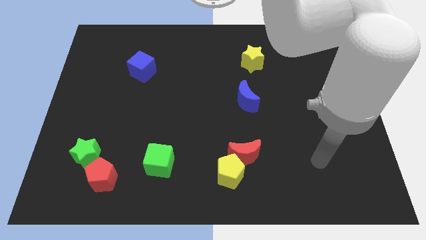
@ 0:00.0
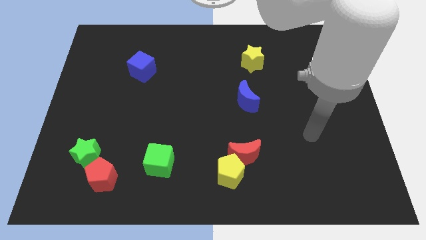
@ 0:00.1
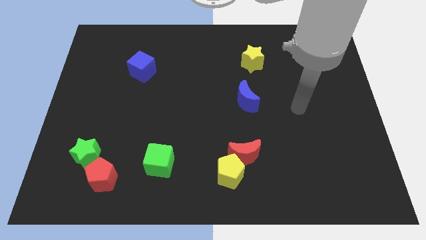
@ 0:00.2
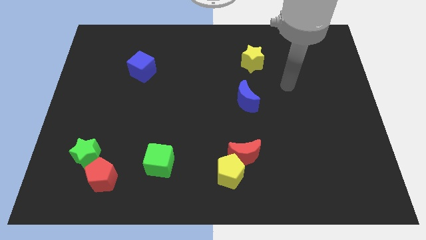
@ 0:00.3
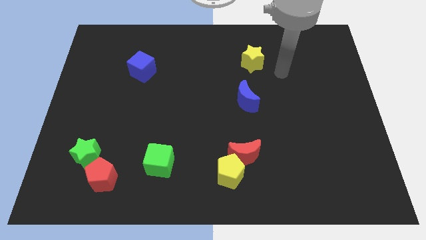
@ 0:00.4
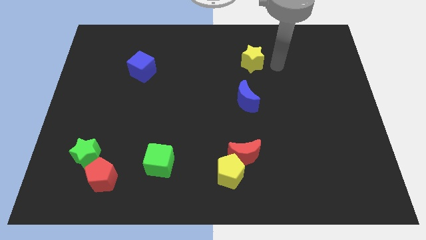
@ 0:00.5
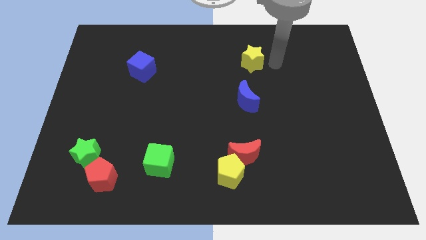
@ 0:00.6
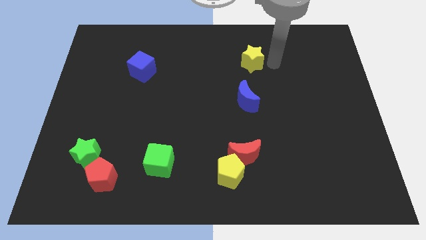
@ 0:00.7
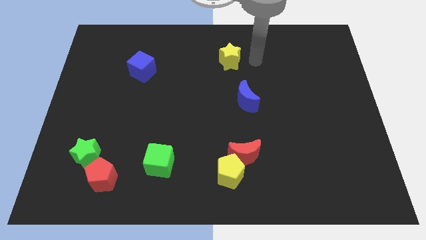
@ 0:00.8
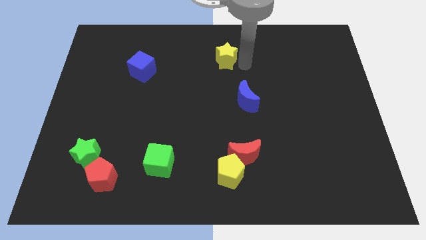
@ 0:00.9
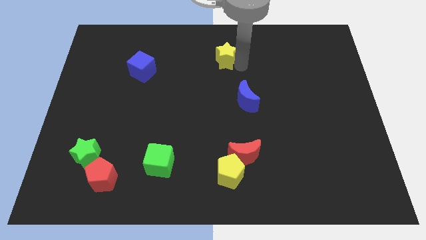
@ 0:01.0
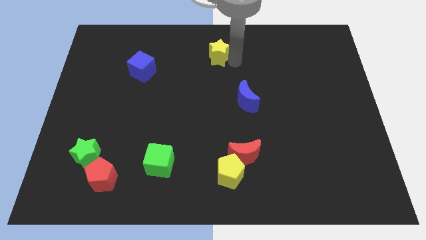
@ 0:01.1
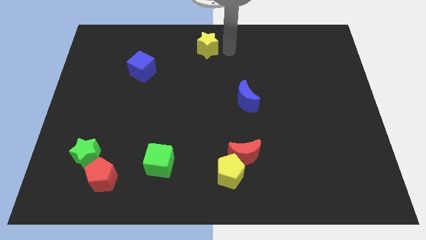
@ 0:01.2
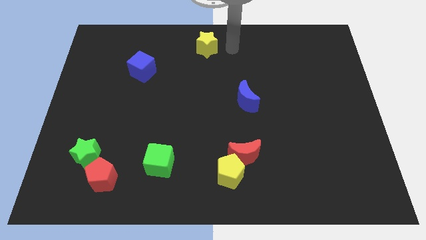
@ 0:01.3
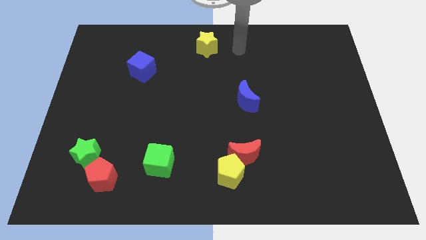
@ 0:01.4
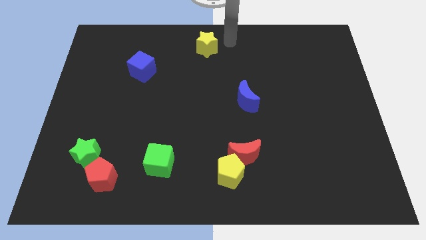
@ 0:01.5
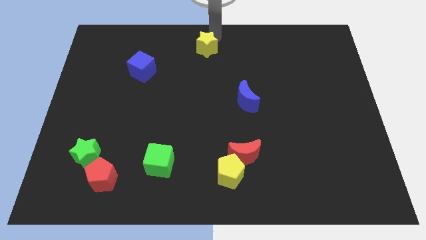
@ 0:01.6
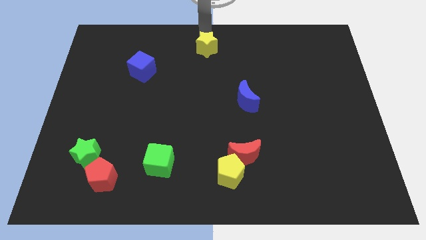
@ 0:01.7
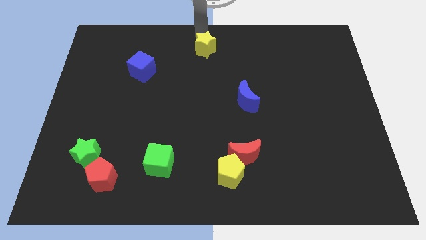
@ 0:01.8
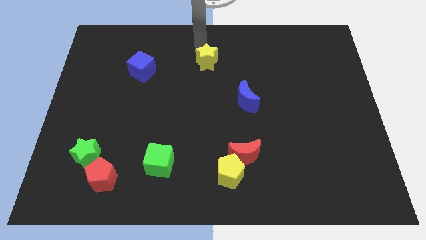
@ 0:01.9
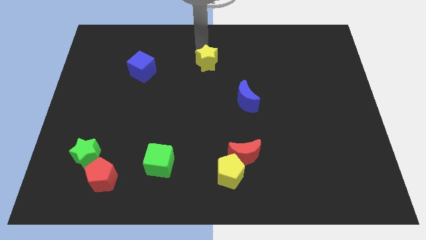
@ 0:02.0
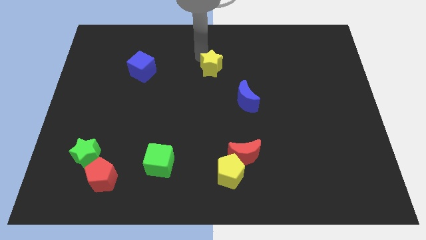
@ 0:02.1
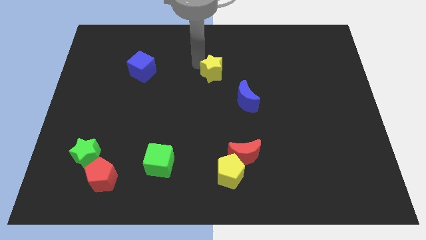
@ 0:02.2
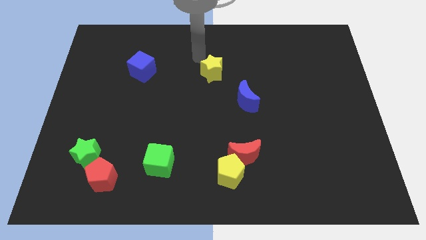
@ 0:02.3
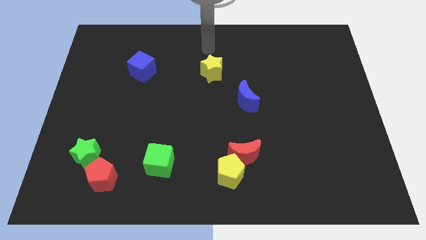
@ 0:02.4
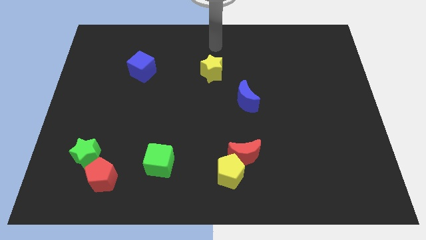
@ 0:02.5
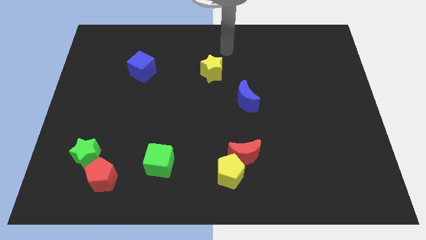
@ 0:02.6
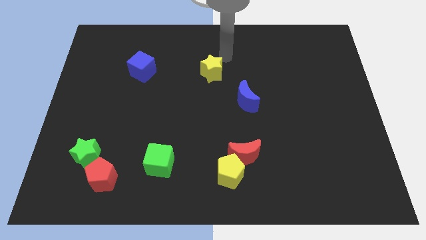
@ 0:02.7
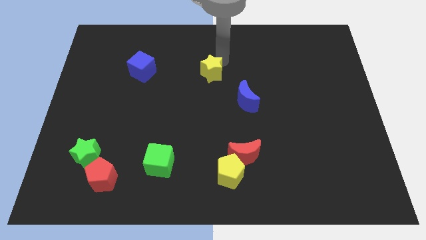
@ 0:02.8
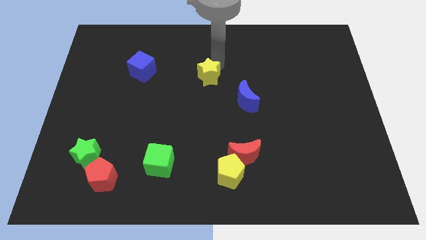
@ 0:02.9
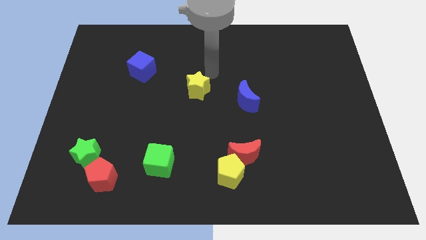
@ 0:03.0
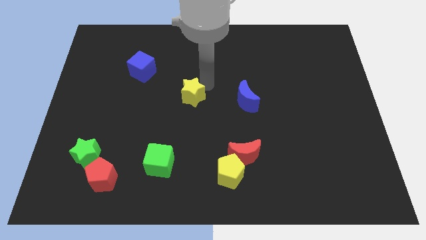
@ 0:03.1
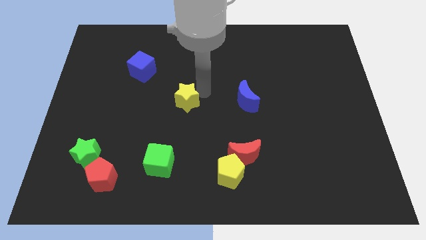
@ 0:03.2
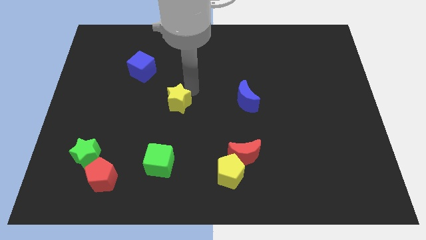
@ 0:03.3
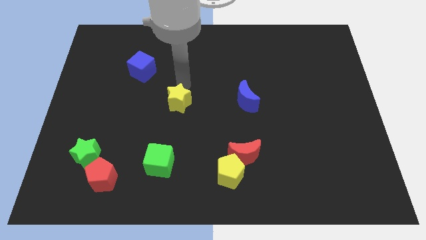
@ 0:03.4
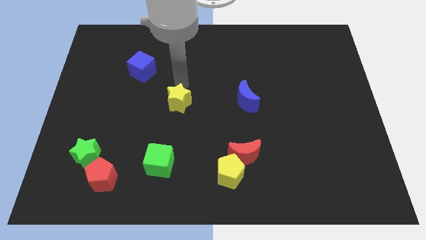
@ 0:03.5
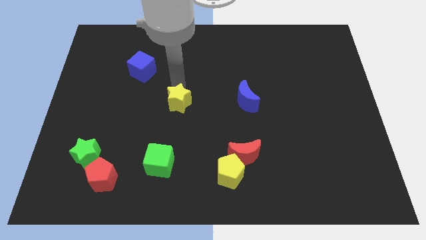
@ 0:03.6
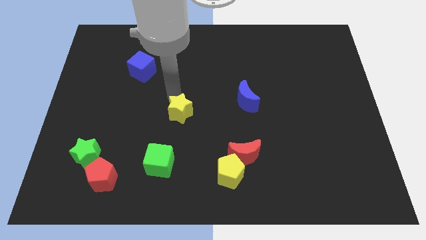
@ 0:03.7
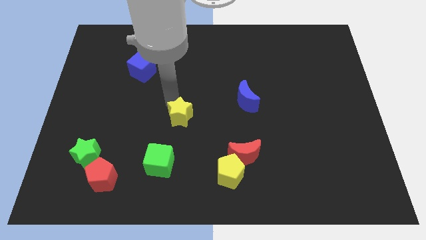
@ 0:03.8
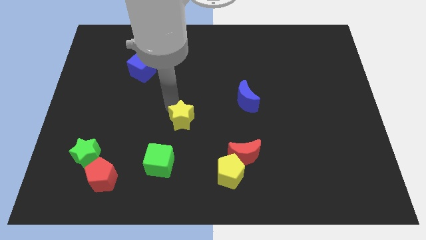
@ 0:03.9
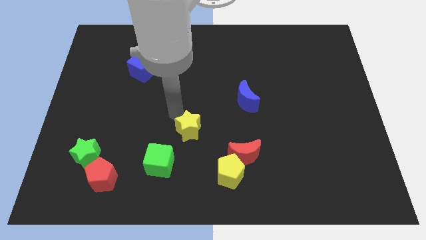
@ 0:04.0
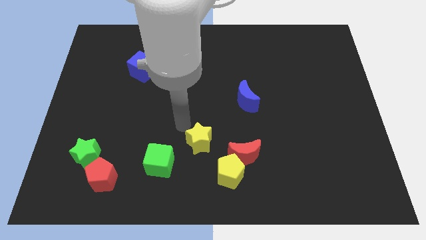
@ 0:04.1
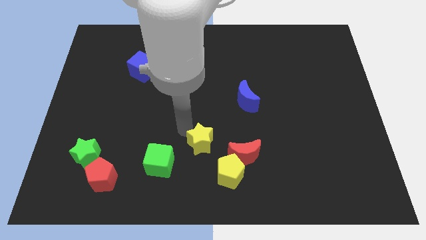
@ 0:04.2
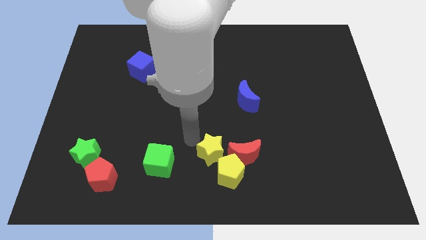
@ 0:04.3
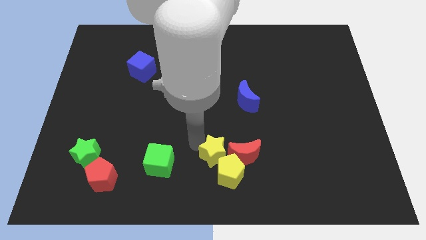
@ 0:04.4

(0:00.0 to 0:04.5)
put the yellow star to the yellow pentagon

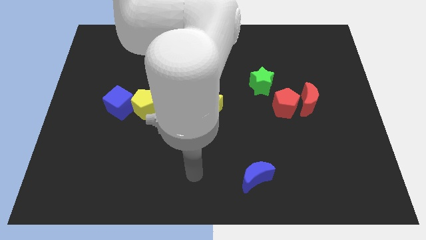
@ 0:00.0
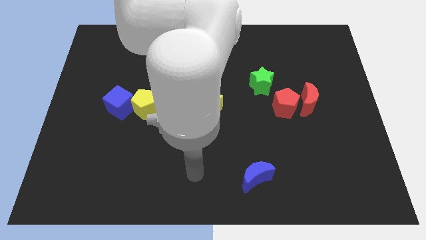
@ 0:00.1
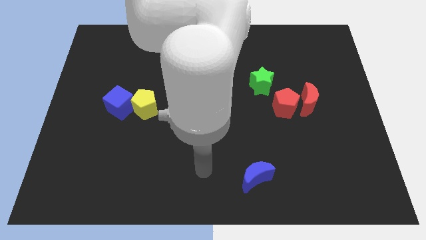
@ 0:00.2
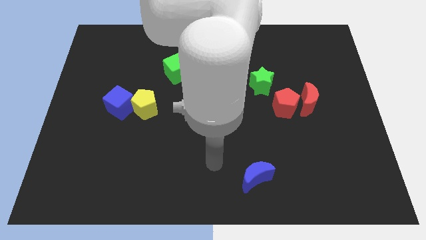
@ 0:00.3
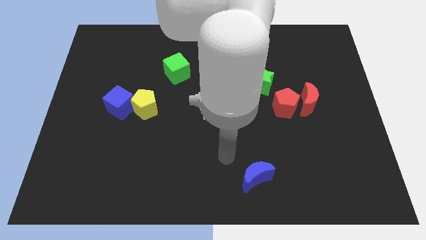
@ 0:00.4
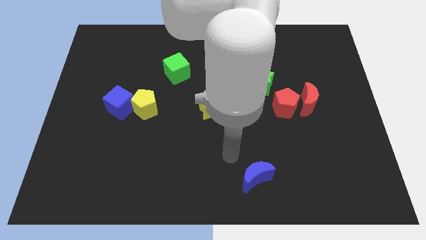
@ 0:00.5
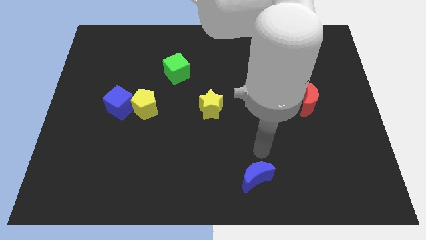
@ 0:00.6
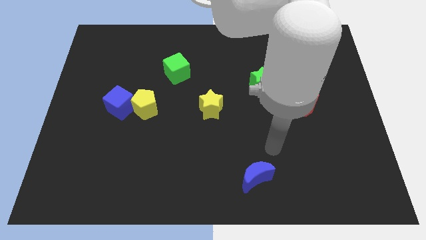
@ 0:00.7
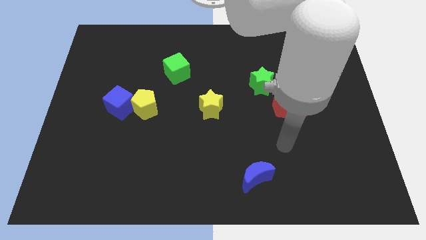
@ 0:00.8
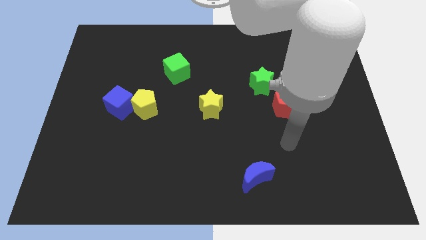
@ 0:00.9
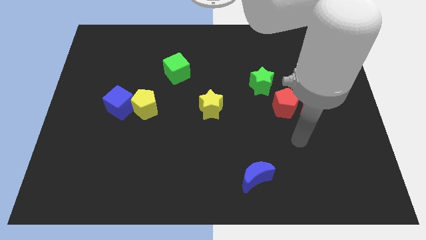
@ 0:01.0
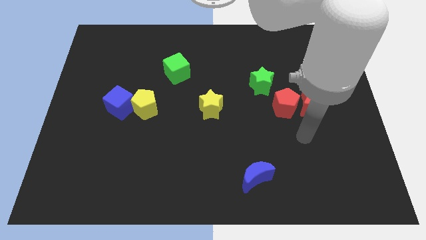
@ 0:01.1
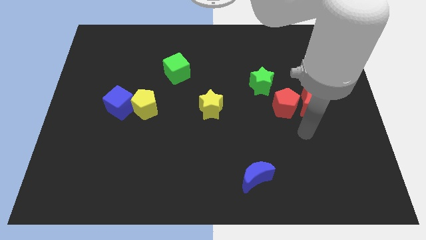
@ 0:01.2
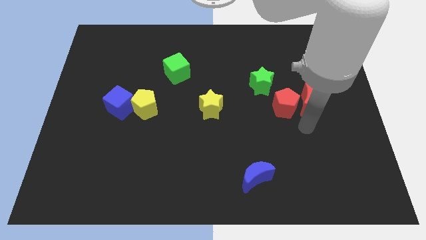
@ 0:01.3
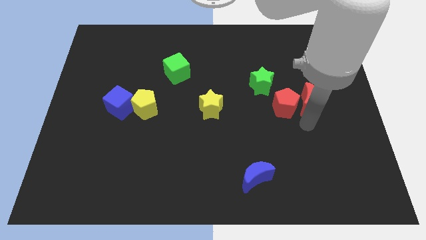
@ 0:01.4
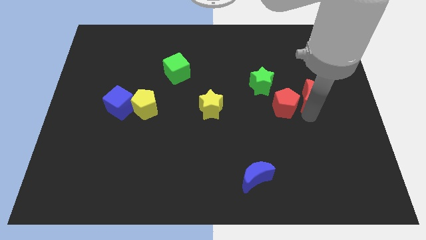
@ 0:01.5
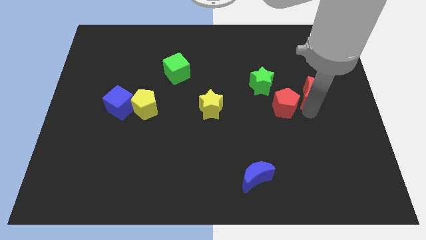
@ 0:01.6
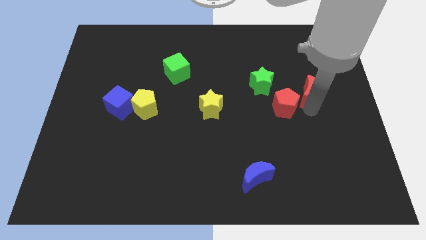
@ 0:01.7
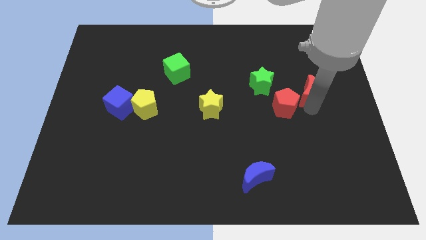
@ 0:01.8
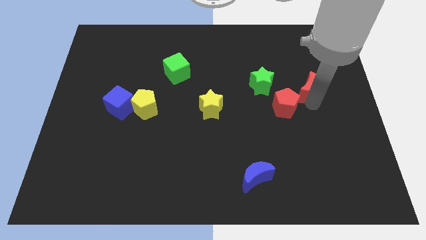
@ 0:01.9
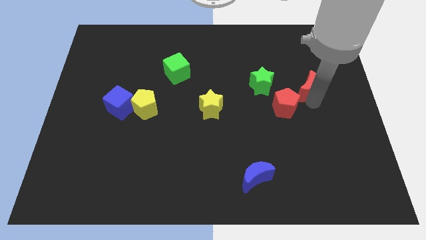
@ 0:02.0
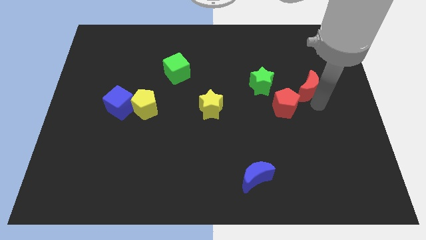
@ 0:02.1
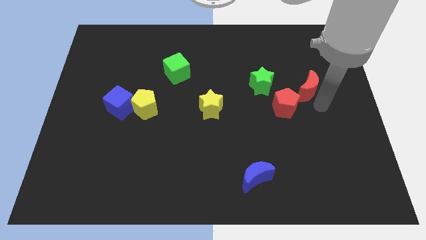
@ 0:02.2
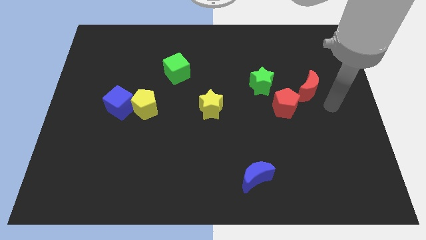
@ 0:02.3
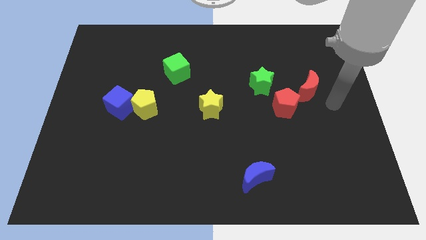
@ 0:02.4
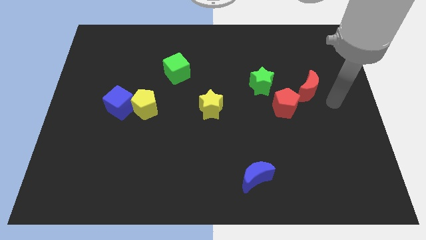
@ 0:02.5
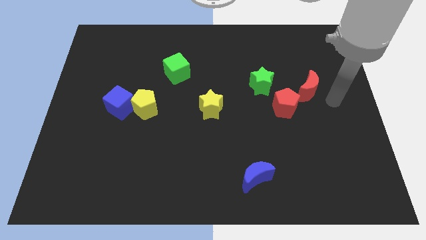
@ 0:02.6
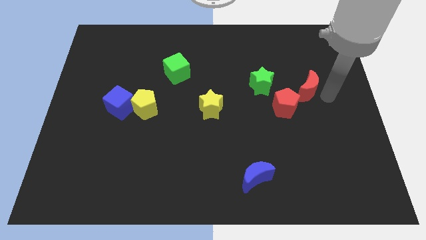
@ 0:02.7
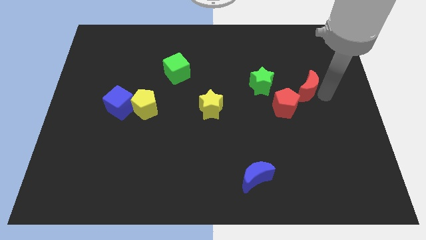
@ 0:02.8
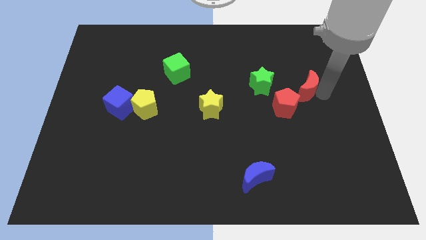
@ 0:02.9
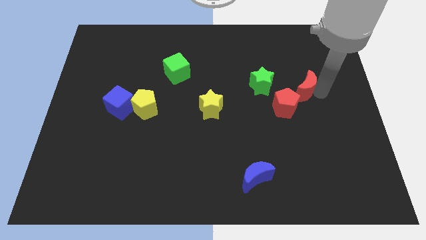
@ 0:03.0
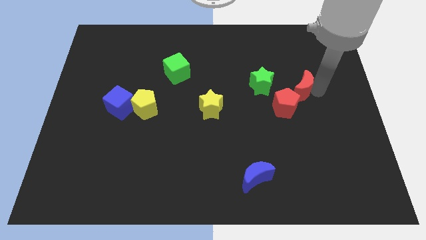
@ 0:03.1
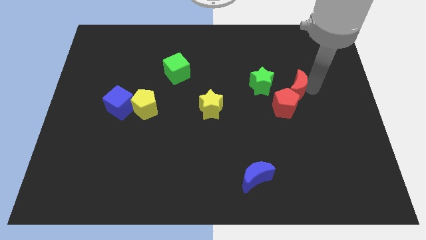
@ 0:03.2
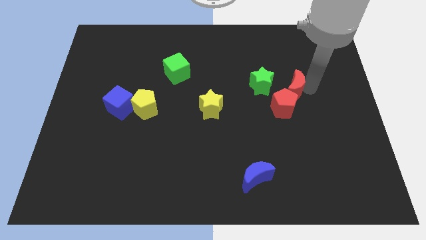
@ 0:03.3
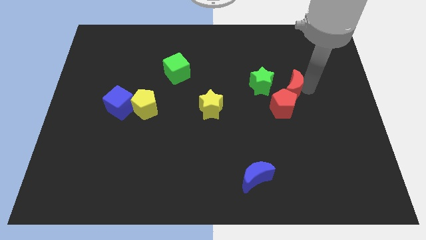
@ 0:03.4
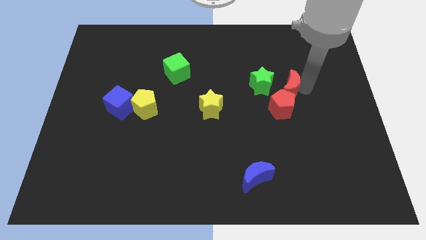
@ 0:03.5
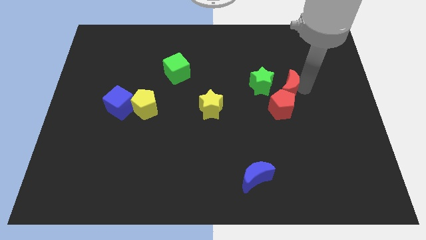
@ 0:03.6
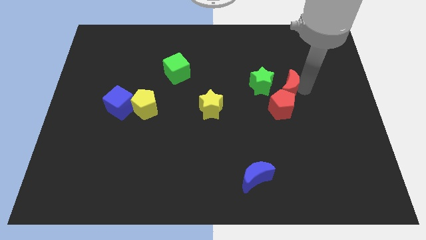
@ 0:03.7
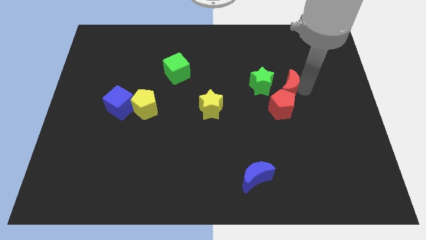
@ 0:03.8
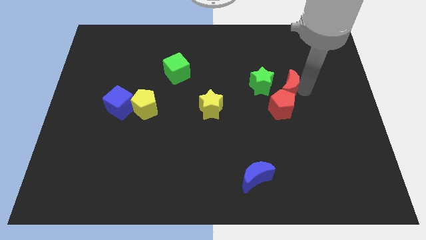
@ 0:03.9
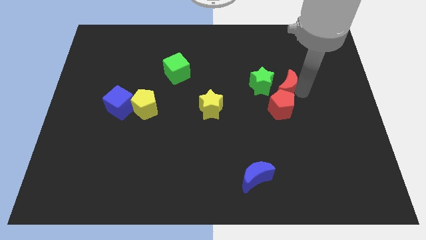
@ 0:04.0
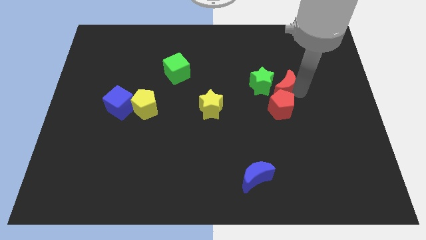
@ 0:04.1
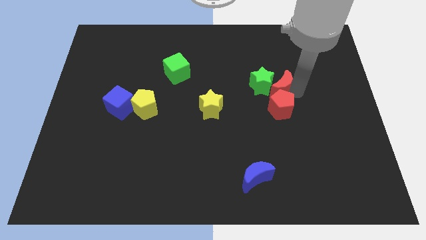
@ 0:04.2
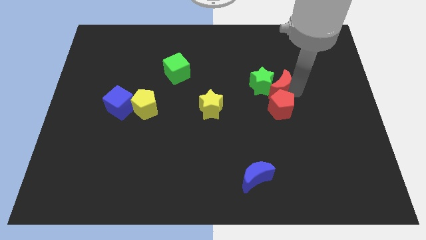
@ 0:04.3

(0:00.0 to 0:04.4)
move the red moon towards the green star
